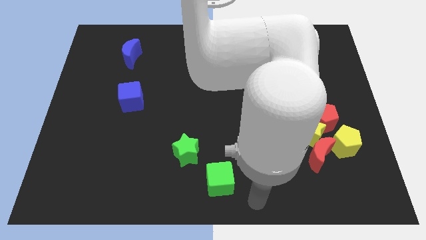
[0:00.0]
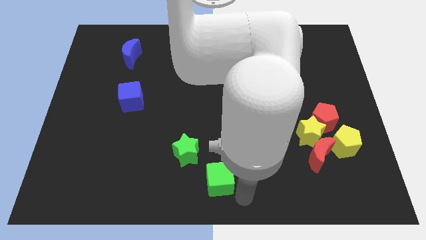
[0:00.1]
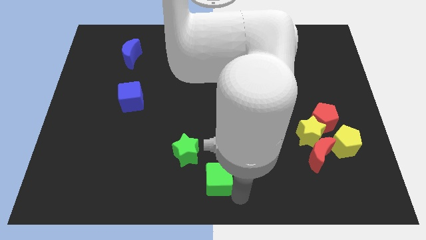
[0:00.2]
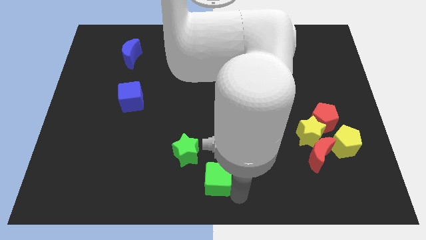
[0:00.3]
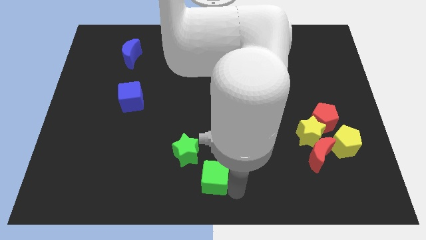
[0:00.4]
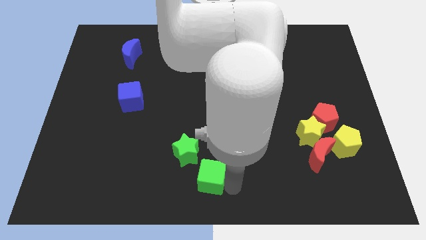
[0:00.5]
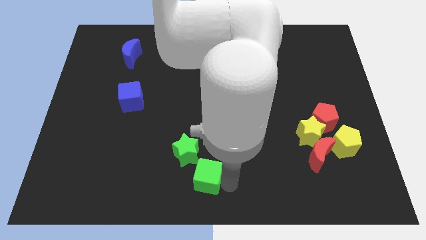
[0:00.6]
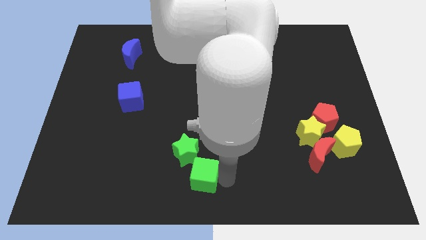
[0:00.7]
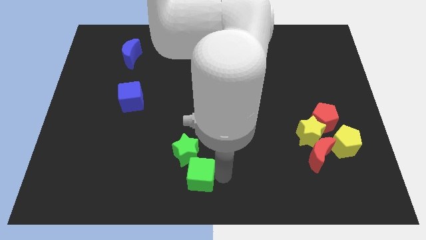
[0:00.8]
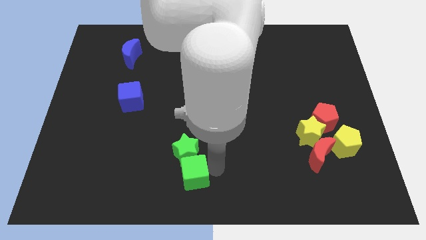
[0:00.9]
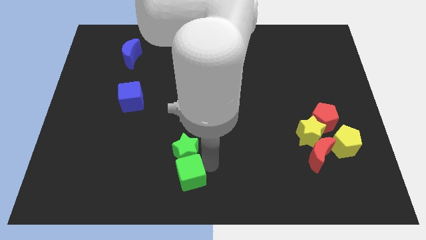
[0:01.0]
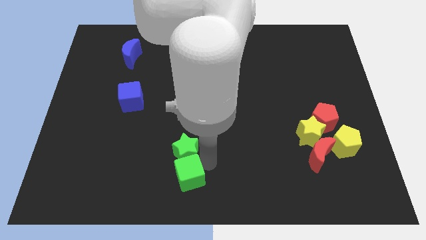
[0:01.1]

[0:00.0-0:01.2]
place the green cube vertically below the green star

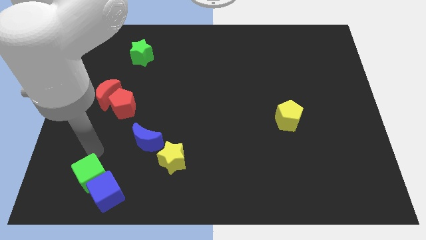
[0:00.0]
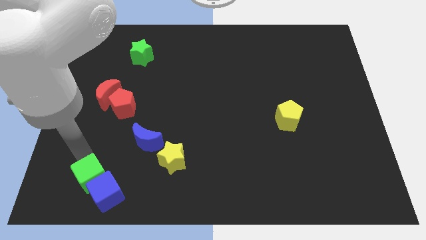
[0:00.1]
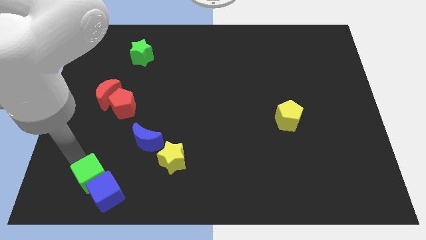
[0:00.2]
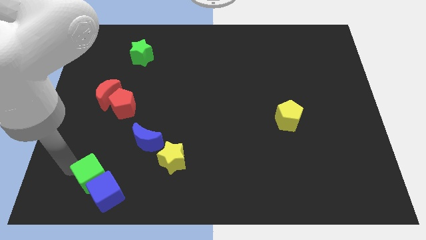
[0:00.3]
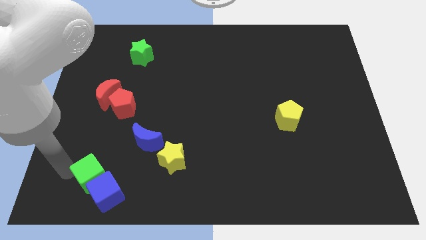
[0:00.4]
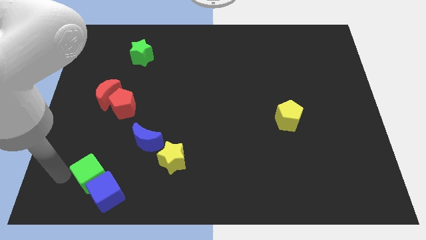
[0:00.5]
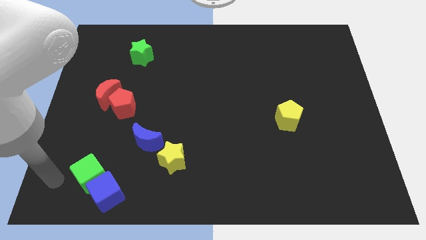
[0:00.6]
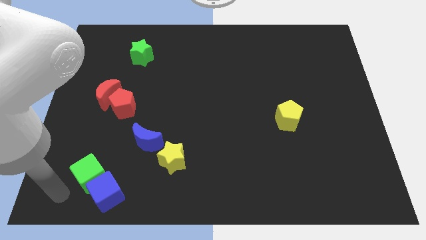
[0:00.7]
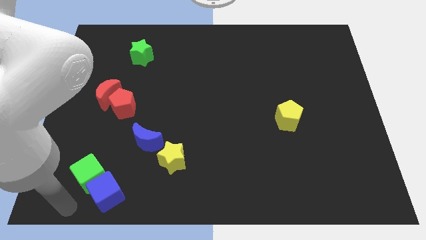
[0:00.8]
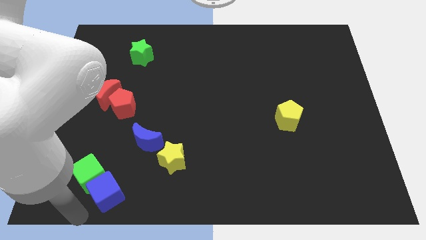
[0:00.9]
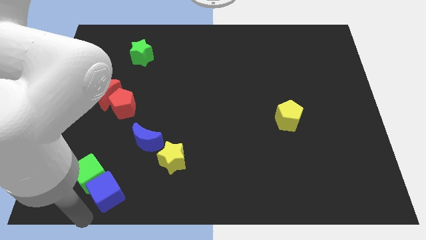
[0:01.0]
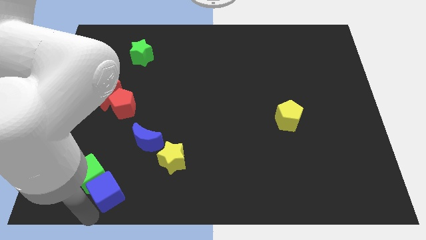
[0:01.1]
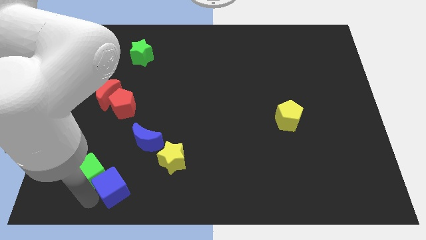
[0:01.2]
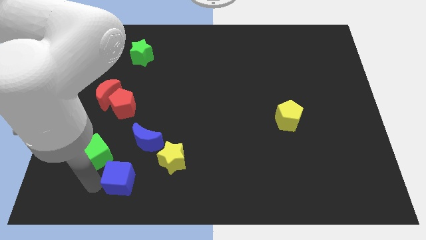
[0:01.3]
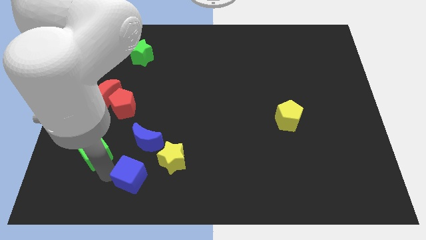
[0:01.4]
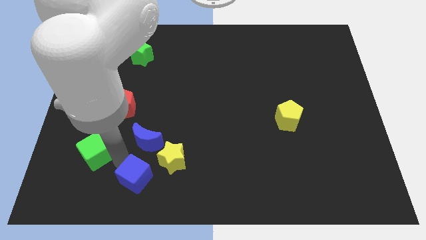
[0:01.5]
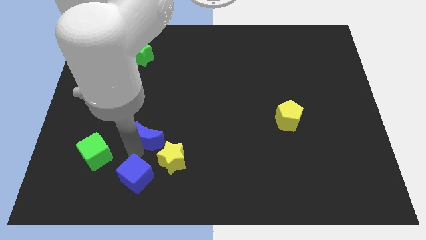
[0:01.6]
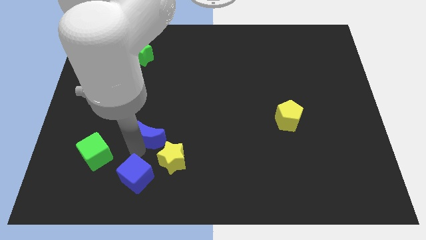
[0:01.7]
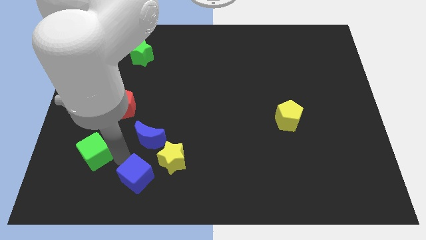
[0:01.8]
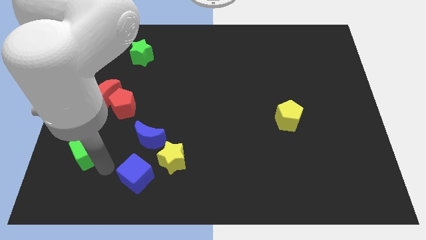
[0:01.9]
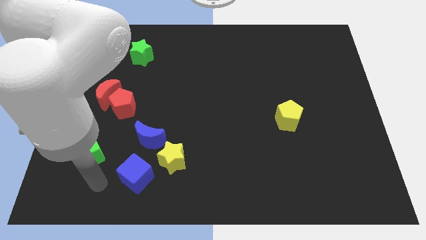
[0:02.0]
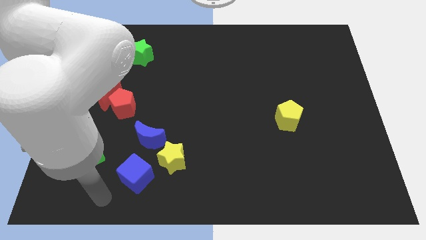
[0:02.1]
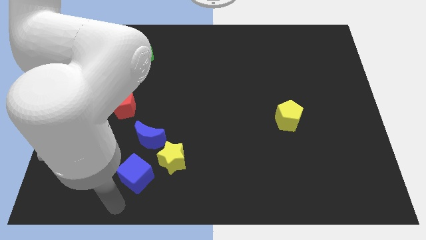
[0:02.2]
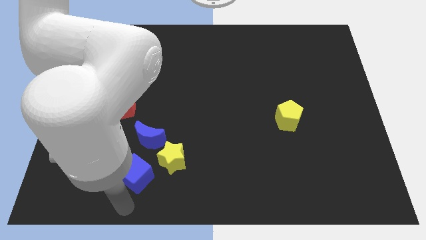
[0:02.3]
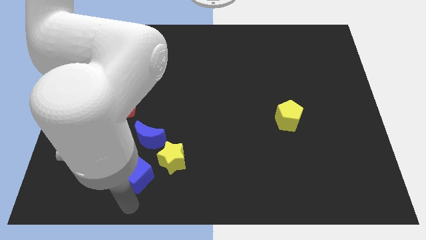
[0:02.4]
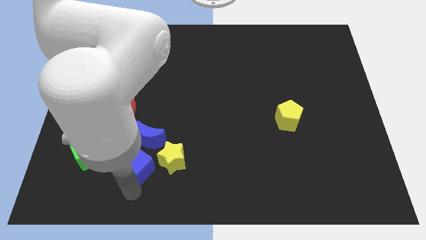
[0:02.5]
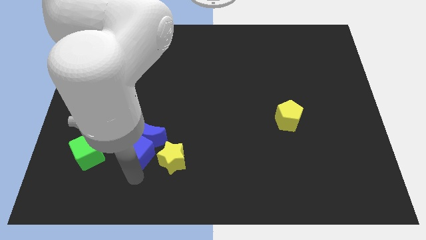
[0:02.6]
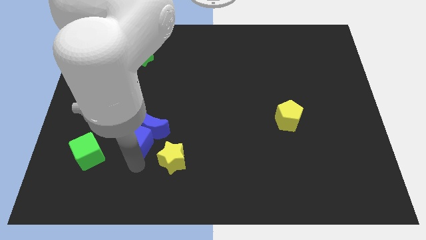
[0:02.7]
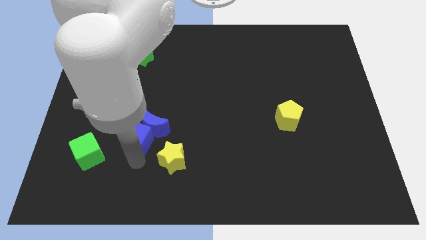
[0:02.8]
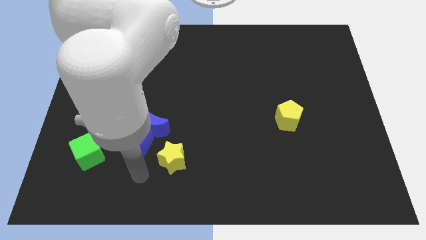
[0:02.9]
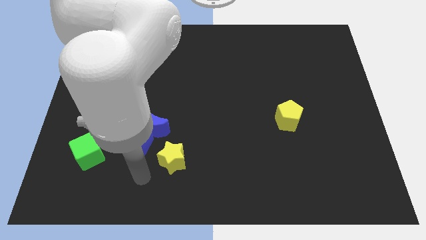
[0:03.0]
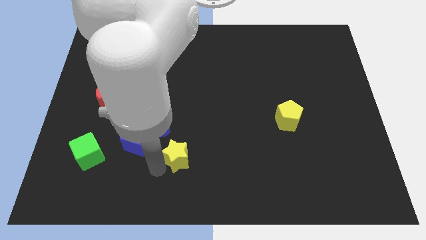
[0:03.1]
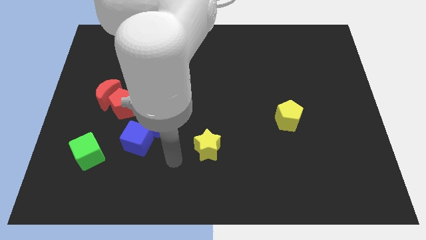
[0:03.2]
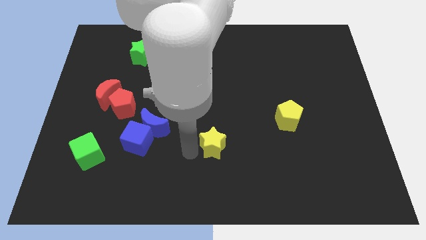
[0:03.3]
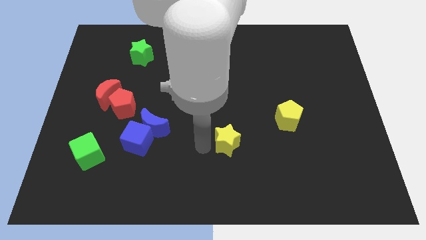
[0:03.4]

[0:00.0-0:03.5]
push the cubes and the star to the top of the board

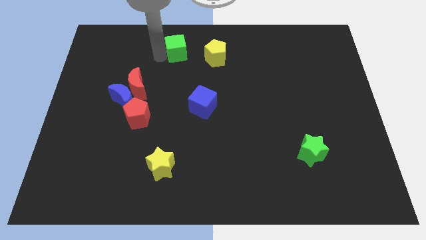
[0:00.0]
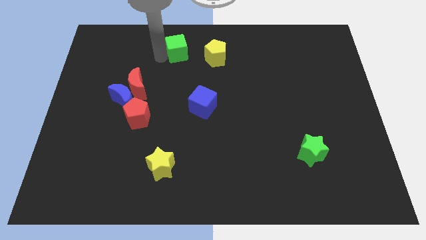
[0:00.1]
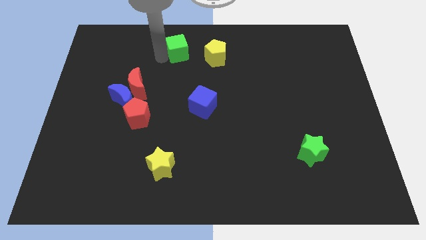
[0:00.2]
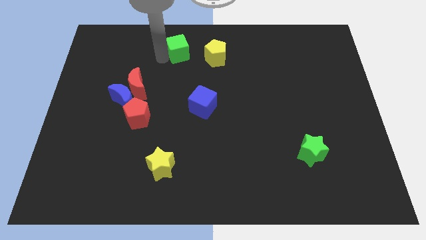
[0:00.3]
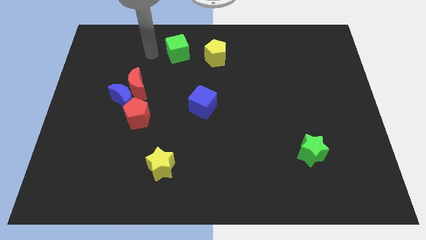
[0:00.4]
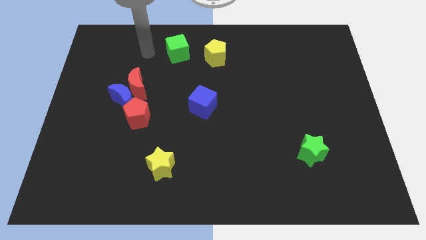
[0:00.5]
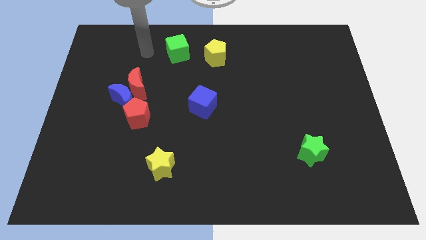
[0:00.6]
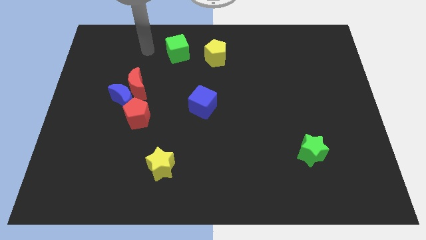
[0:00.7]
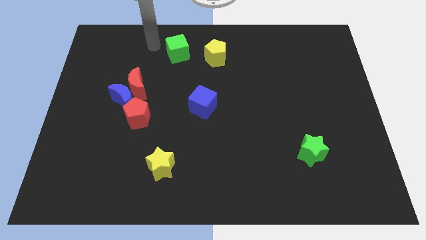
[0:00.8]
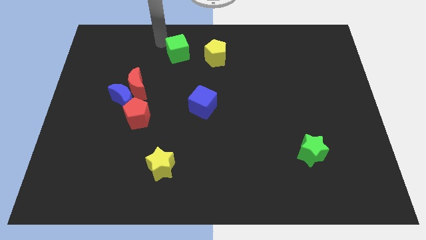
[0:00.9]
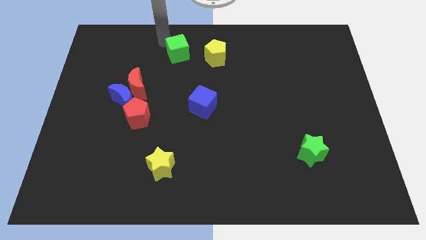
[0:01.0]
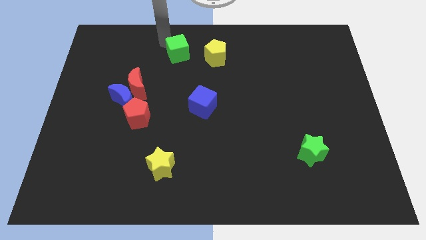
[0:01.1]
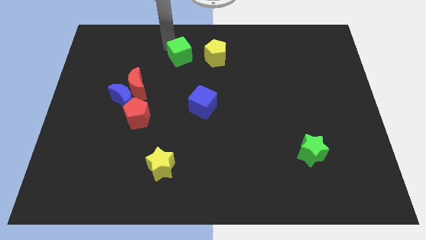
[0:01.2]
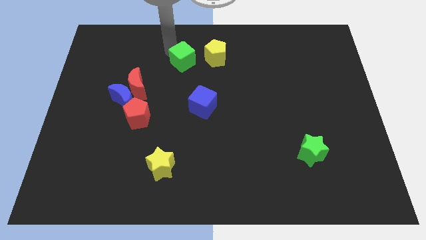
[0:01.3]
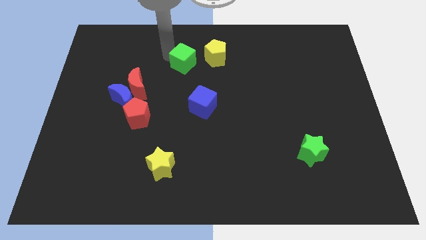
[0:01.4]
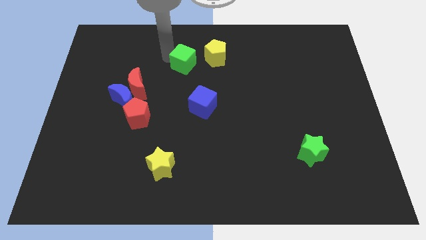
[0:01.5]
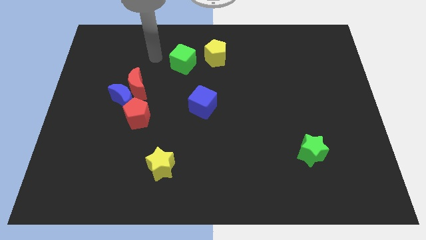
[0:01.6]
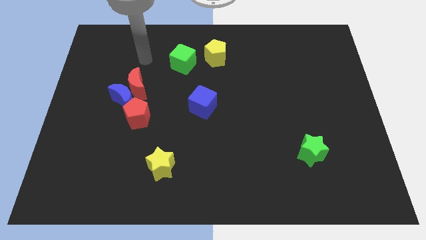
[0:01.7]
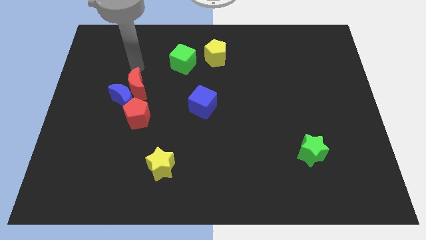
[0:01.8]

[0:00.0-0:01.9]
push the green cube towards the blue cube

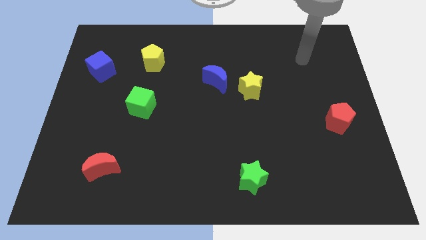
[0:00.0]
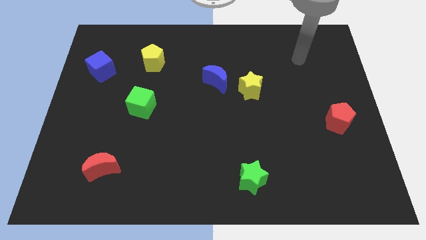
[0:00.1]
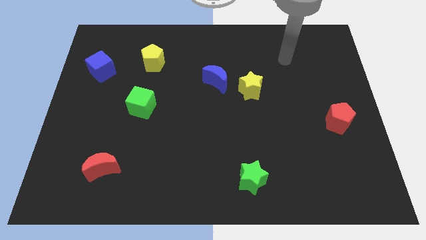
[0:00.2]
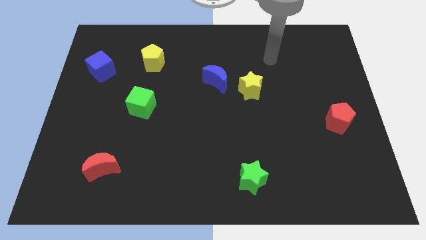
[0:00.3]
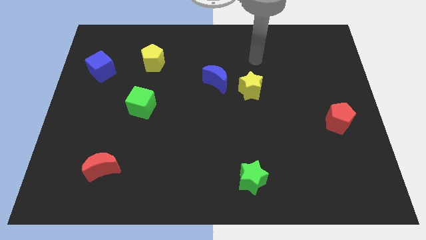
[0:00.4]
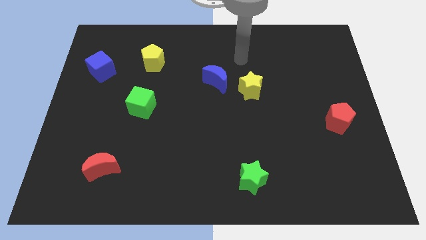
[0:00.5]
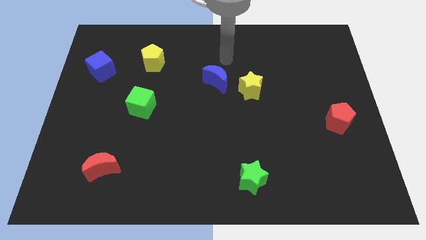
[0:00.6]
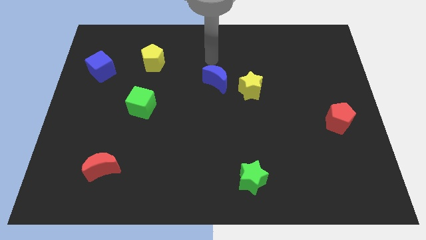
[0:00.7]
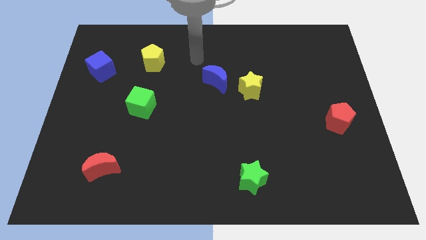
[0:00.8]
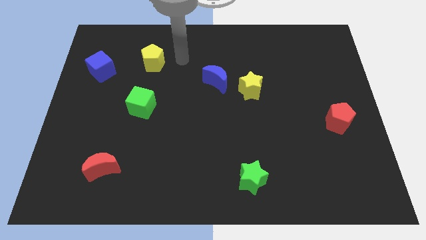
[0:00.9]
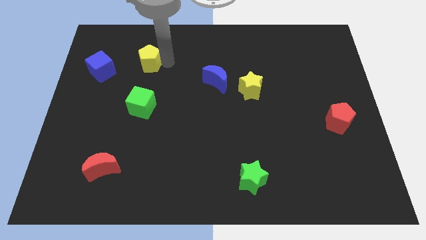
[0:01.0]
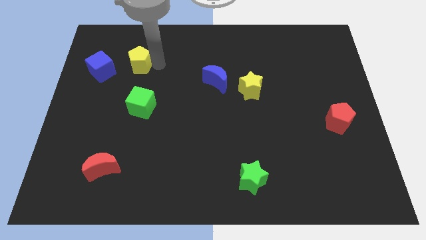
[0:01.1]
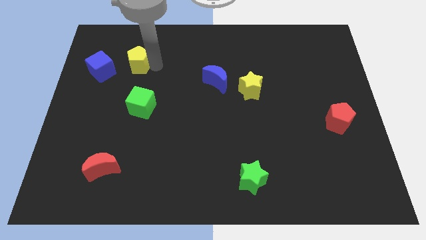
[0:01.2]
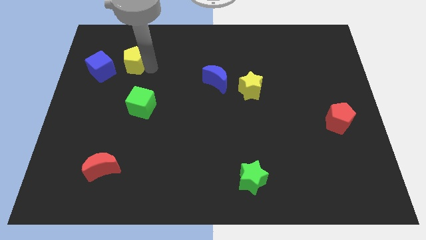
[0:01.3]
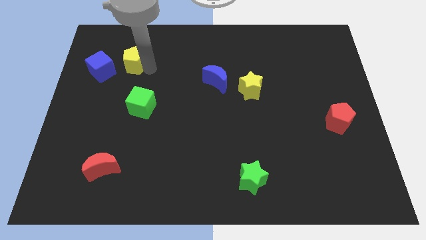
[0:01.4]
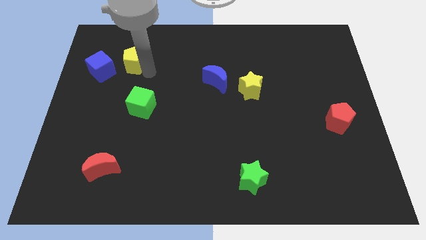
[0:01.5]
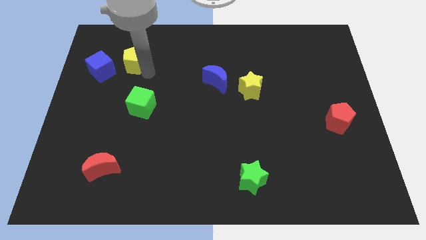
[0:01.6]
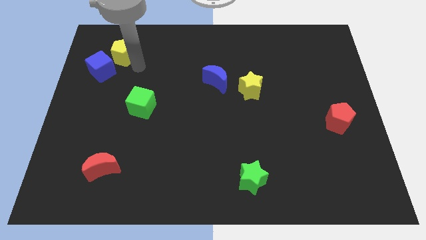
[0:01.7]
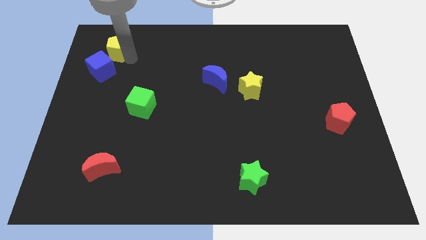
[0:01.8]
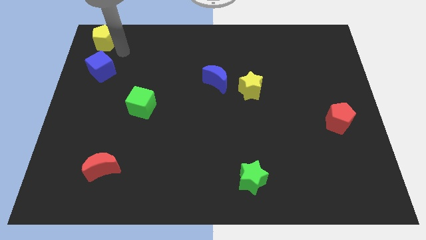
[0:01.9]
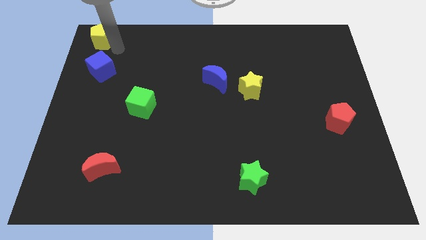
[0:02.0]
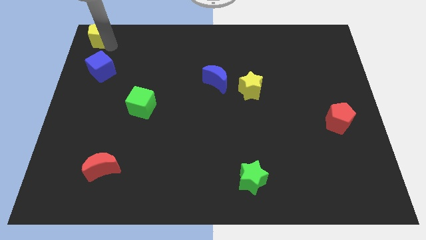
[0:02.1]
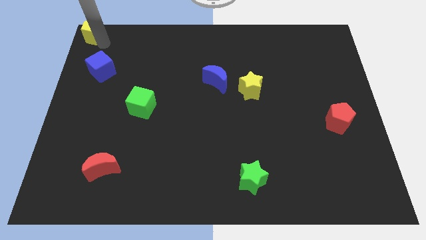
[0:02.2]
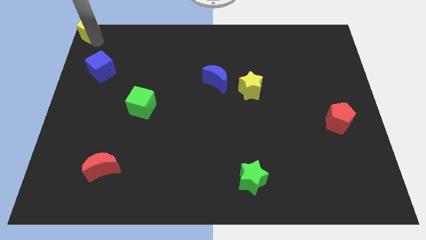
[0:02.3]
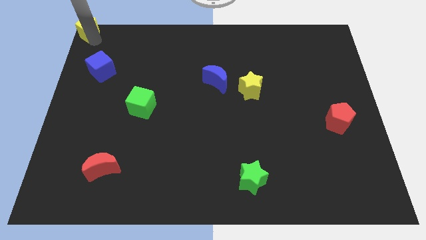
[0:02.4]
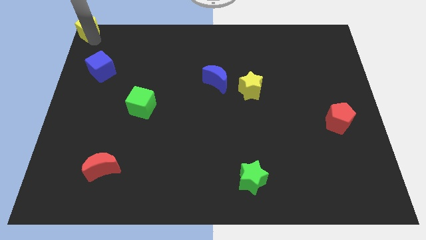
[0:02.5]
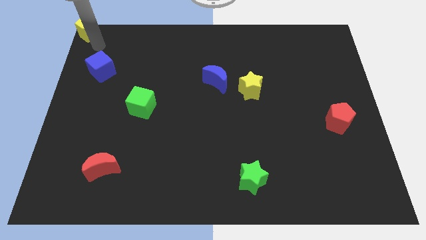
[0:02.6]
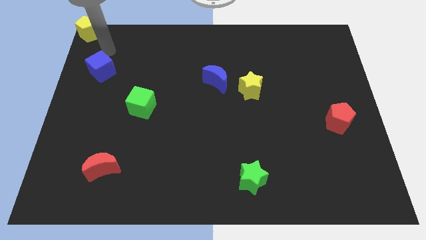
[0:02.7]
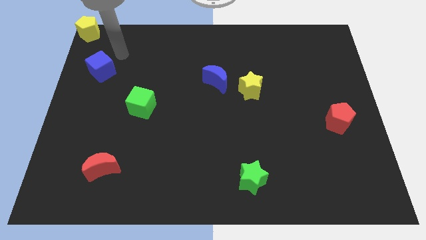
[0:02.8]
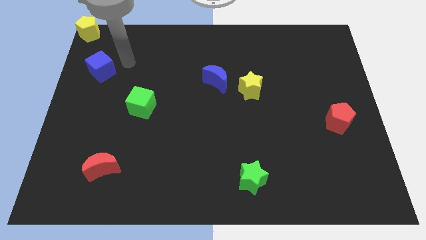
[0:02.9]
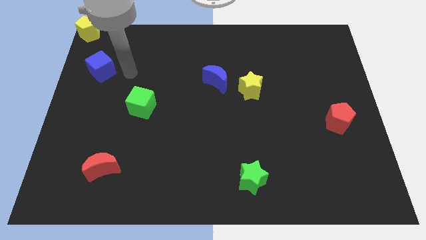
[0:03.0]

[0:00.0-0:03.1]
put the yellow pentagon diagonally top left to the blue cube
